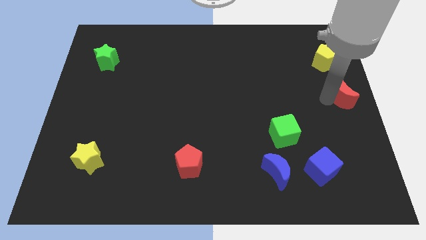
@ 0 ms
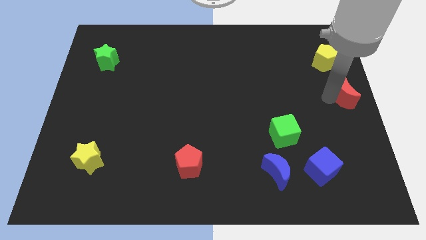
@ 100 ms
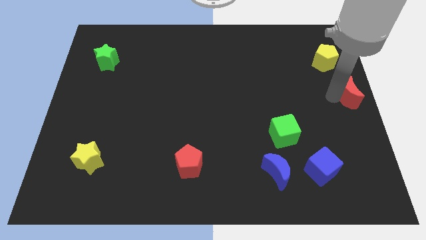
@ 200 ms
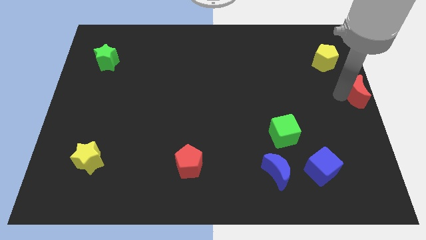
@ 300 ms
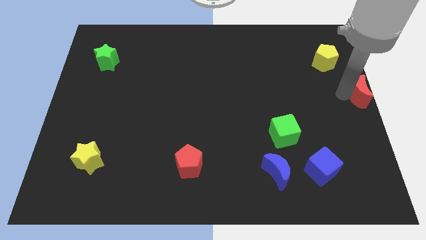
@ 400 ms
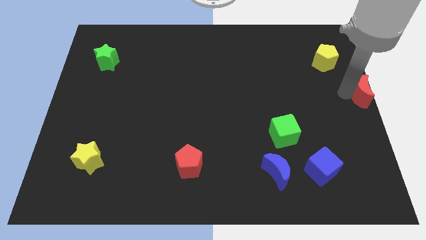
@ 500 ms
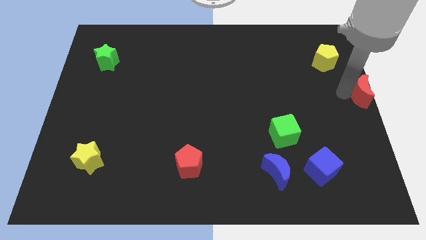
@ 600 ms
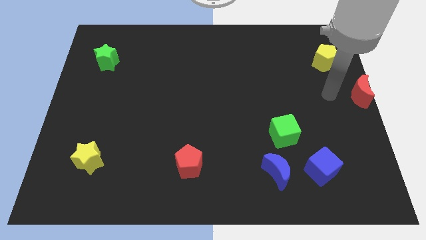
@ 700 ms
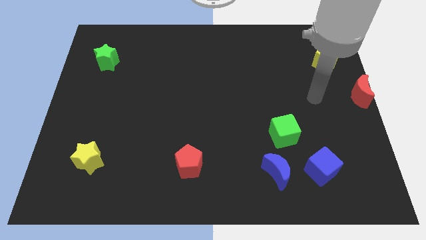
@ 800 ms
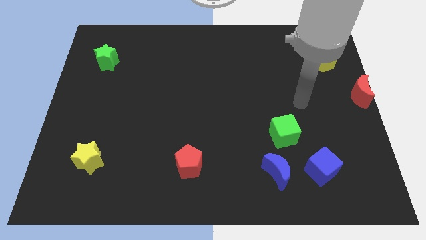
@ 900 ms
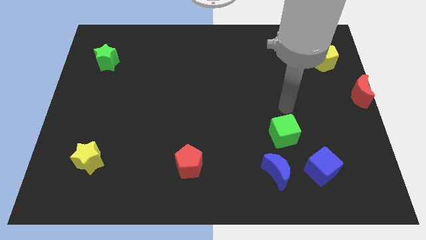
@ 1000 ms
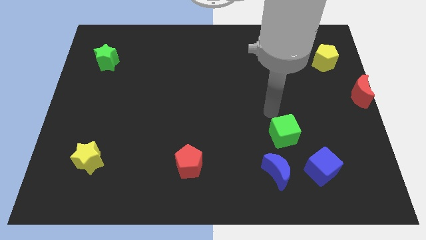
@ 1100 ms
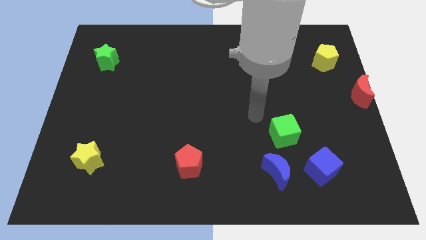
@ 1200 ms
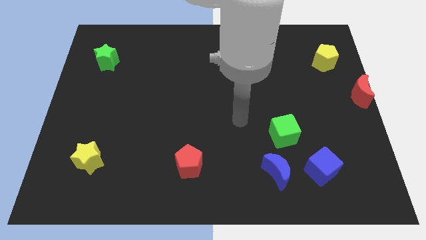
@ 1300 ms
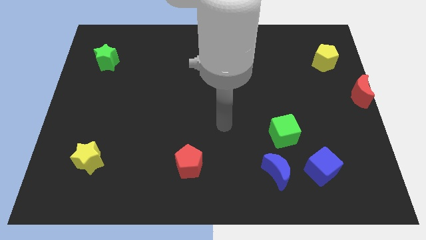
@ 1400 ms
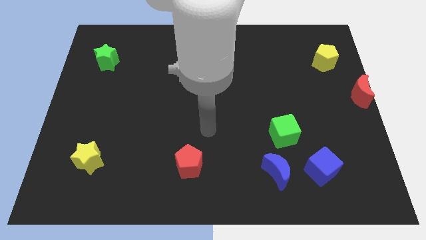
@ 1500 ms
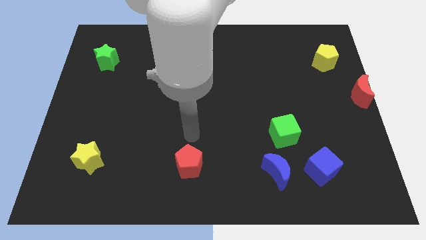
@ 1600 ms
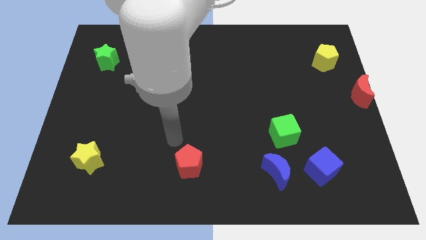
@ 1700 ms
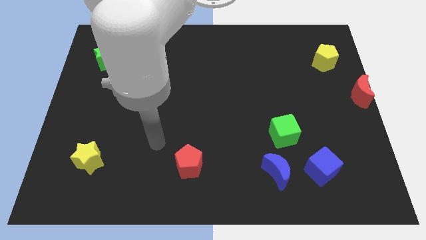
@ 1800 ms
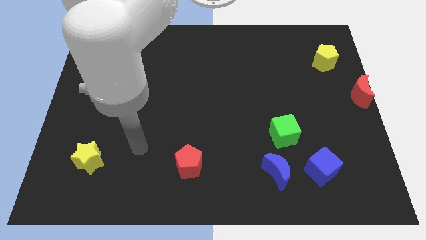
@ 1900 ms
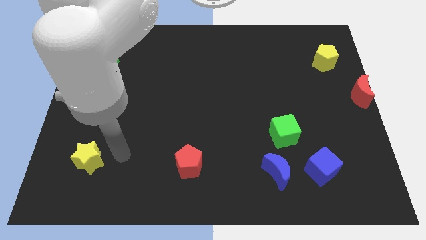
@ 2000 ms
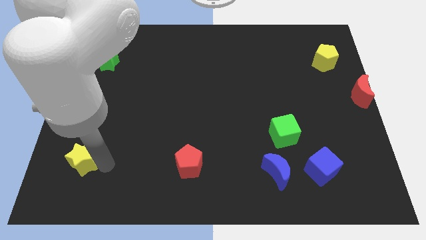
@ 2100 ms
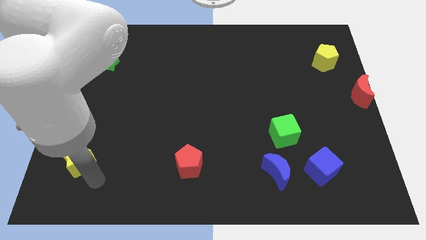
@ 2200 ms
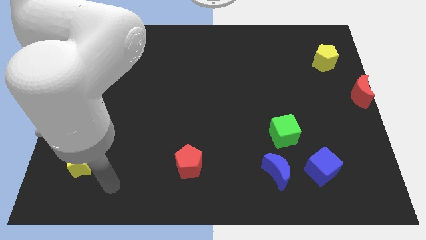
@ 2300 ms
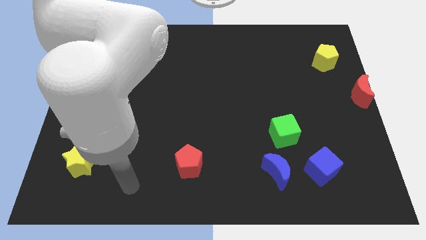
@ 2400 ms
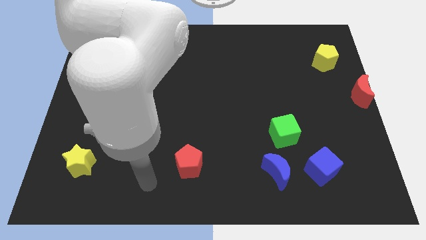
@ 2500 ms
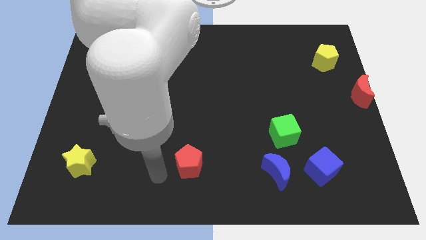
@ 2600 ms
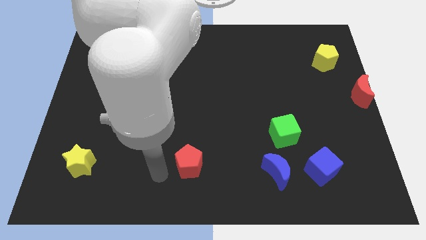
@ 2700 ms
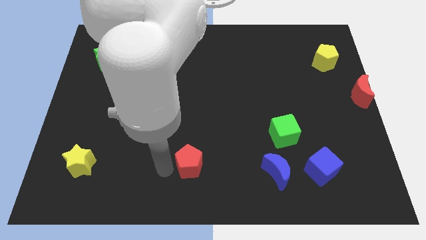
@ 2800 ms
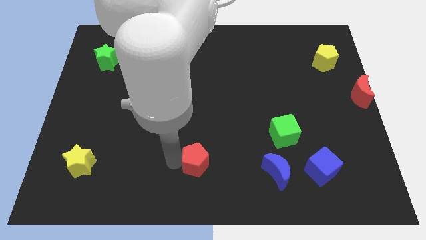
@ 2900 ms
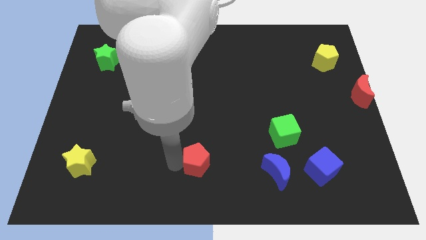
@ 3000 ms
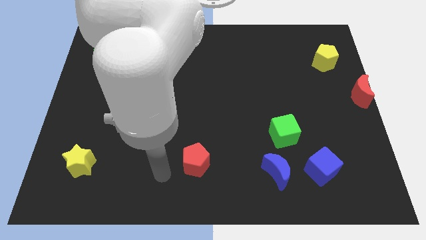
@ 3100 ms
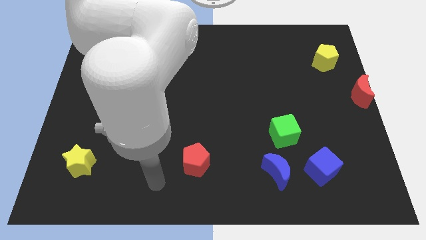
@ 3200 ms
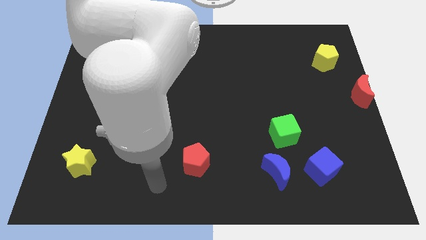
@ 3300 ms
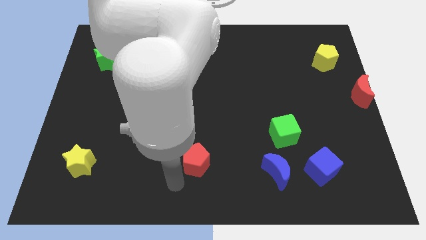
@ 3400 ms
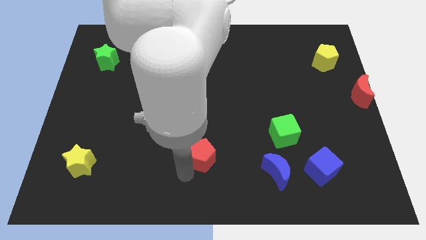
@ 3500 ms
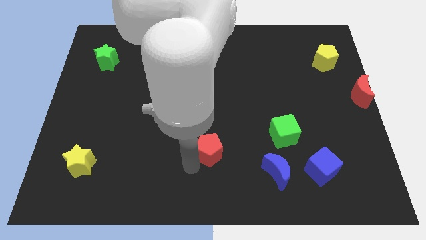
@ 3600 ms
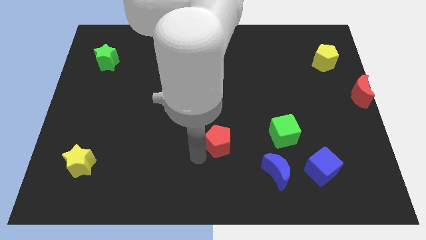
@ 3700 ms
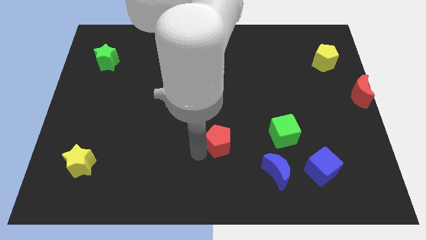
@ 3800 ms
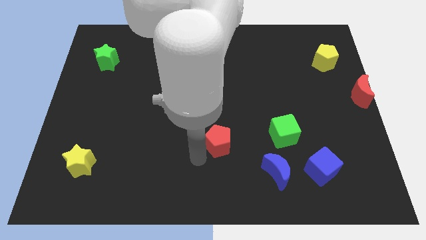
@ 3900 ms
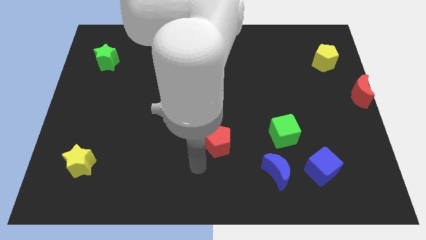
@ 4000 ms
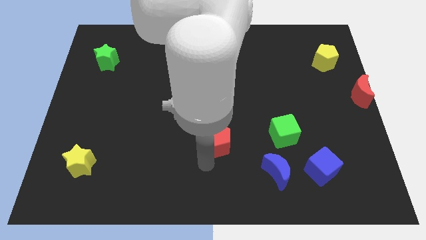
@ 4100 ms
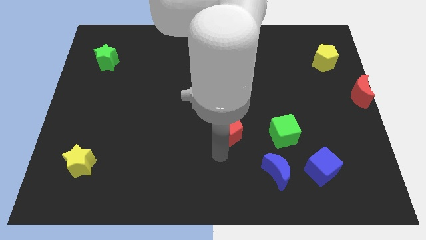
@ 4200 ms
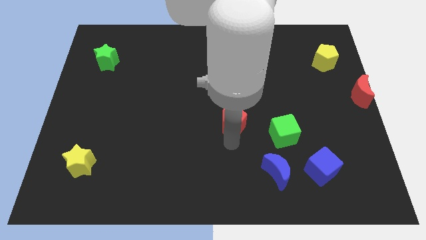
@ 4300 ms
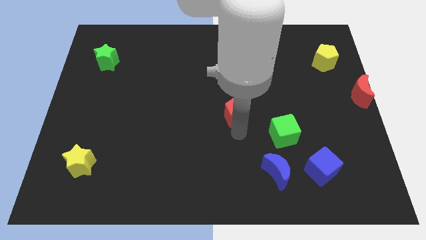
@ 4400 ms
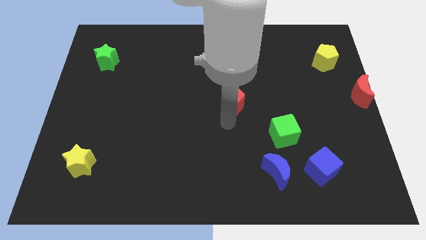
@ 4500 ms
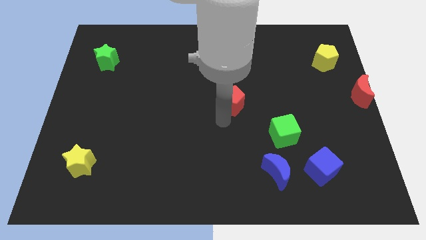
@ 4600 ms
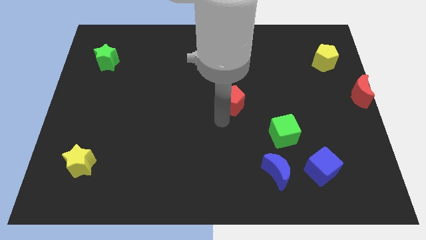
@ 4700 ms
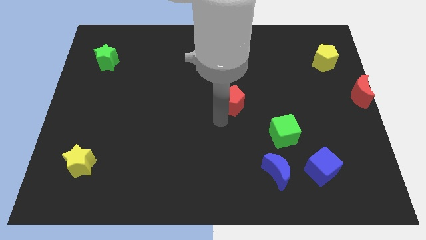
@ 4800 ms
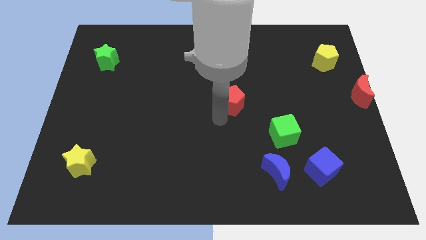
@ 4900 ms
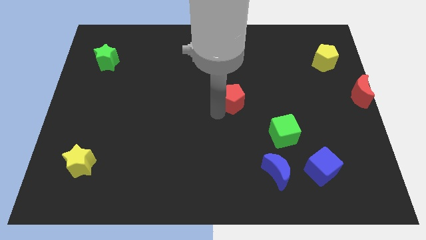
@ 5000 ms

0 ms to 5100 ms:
place the red pentagon at the center

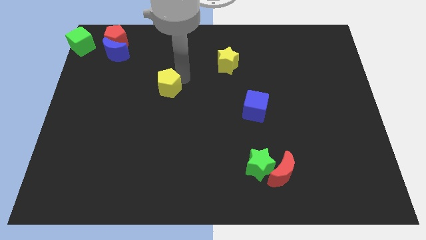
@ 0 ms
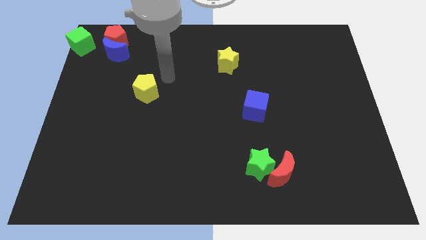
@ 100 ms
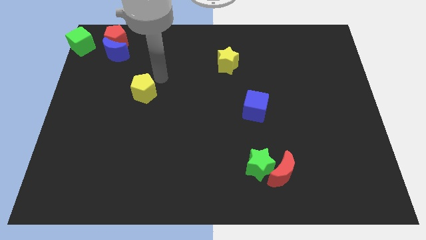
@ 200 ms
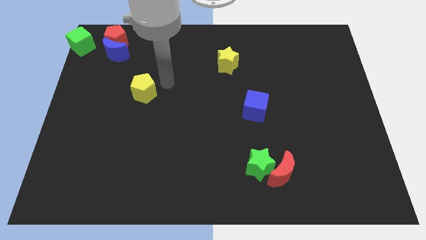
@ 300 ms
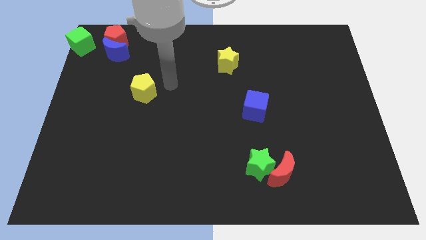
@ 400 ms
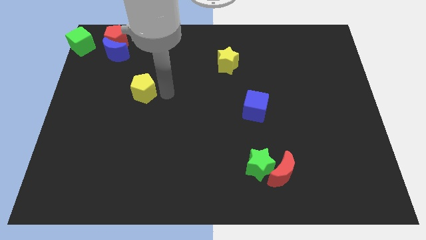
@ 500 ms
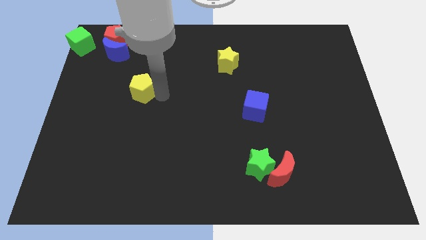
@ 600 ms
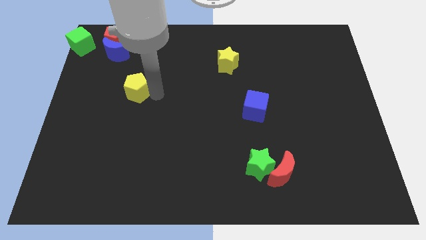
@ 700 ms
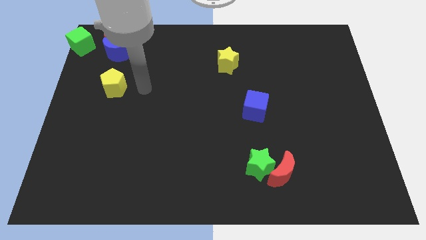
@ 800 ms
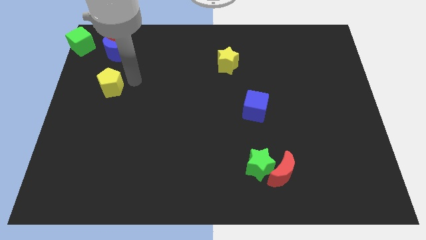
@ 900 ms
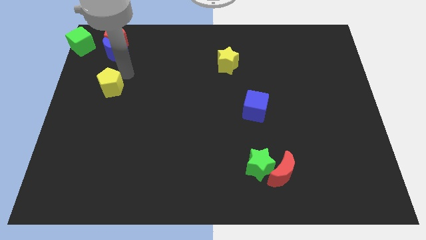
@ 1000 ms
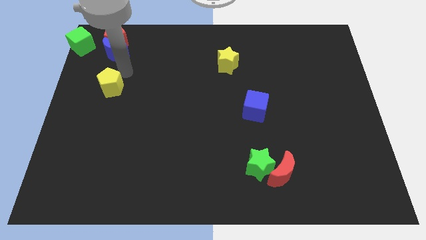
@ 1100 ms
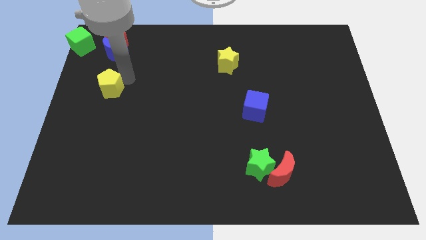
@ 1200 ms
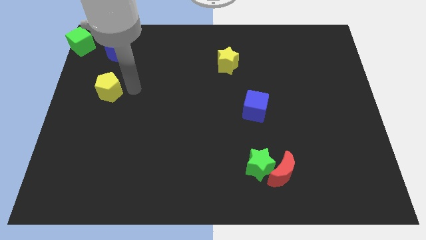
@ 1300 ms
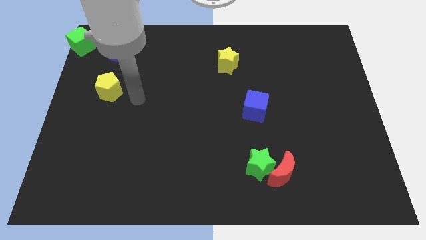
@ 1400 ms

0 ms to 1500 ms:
move the yellow pentagon slightly towards the left side

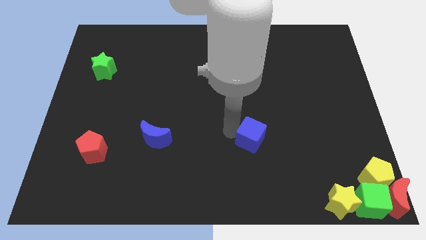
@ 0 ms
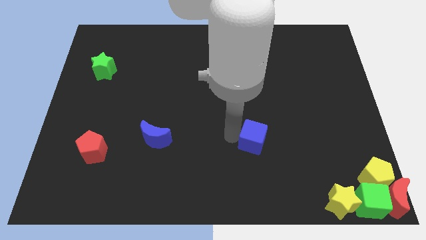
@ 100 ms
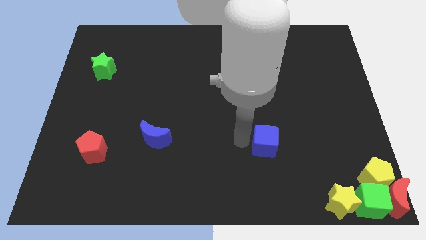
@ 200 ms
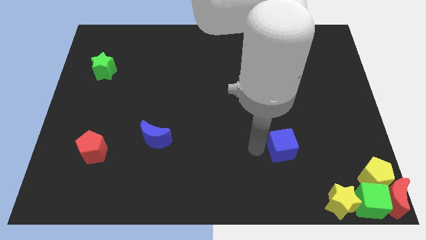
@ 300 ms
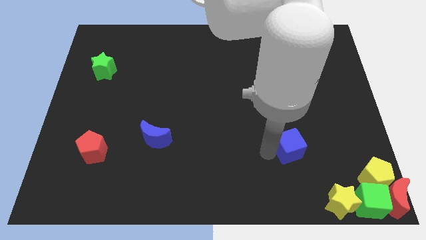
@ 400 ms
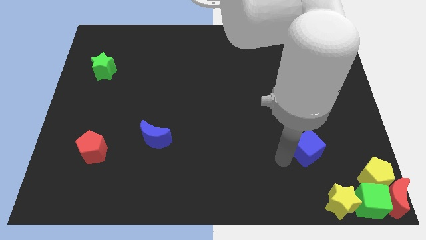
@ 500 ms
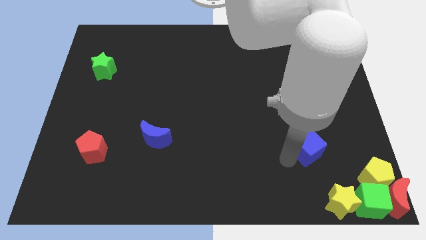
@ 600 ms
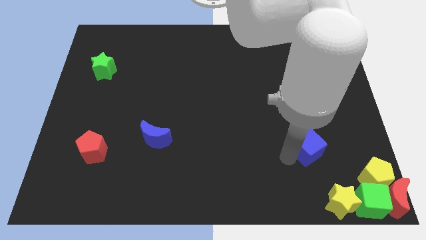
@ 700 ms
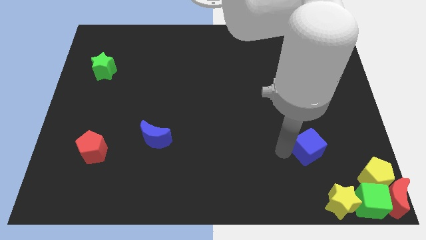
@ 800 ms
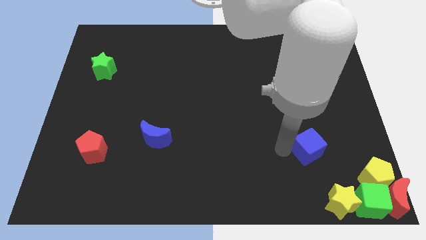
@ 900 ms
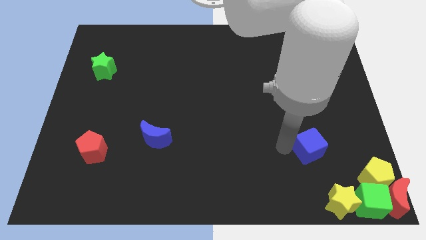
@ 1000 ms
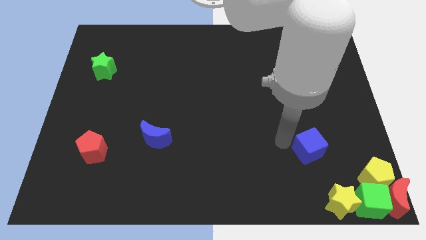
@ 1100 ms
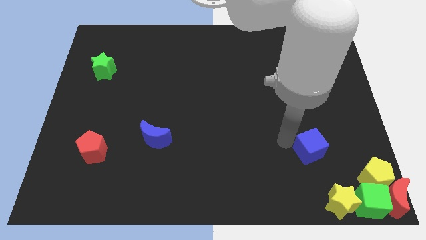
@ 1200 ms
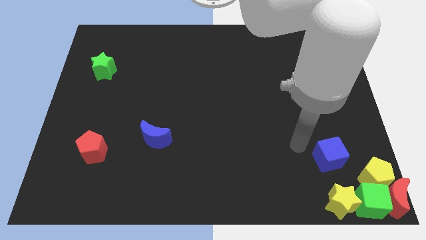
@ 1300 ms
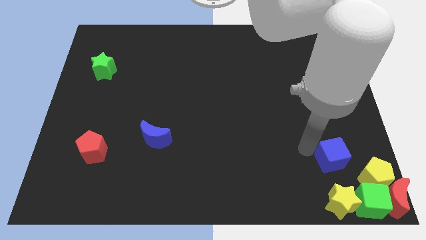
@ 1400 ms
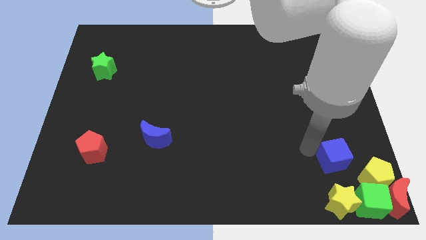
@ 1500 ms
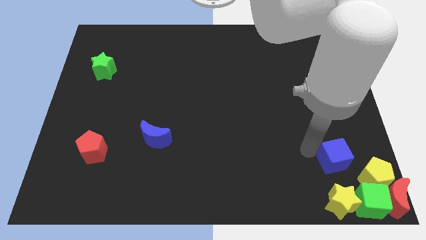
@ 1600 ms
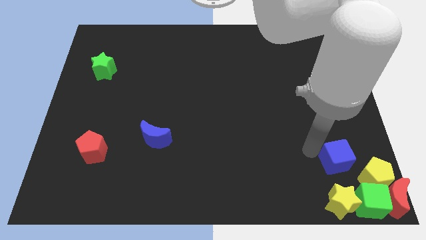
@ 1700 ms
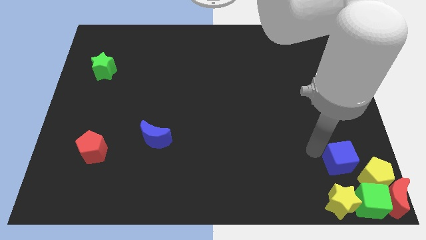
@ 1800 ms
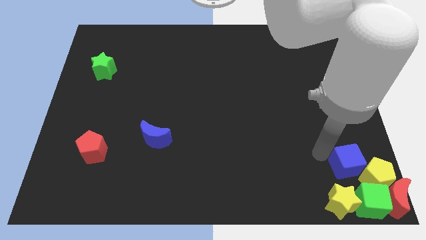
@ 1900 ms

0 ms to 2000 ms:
place the blue cube to the top side of the the yellow star

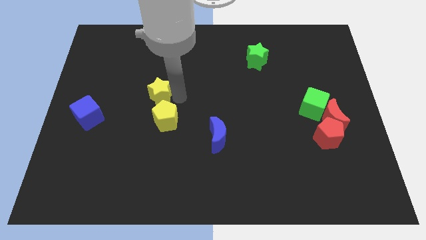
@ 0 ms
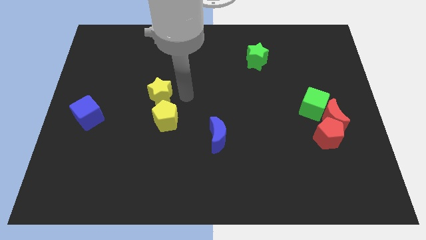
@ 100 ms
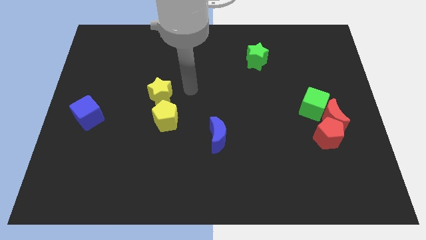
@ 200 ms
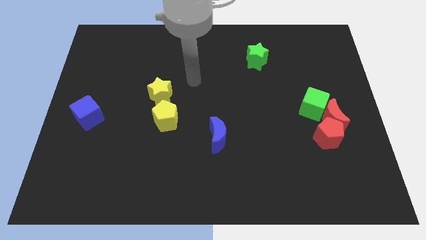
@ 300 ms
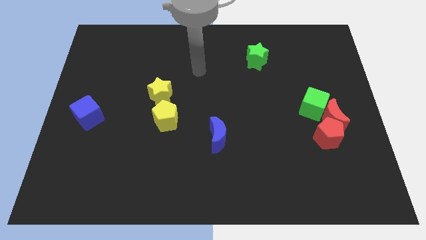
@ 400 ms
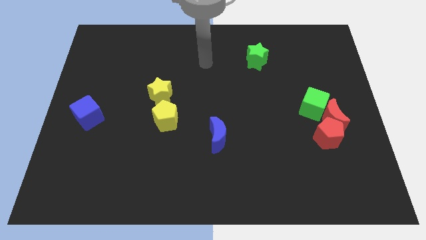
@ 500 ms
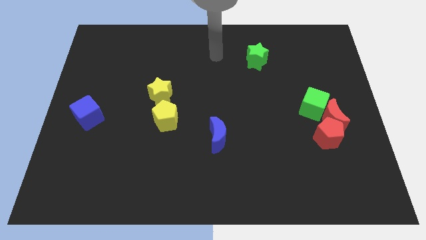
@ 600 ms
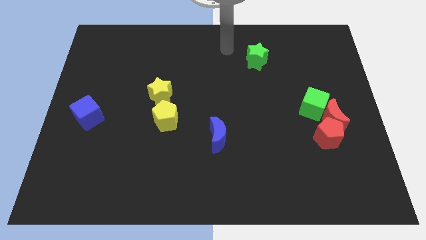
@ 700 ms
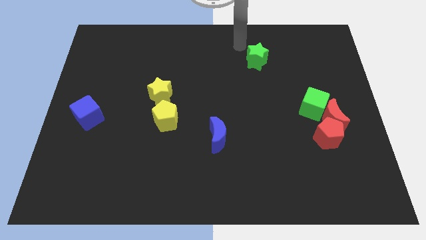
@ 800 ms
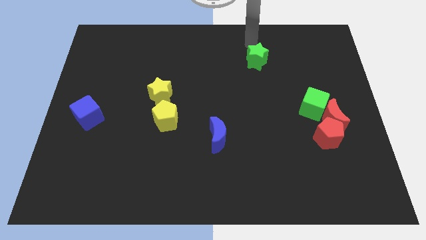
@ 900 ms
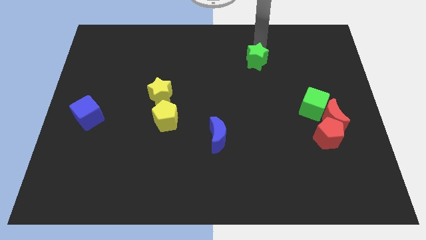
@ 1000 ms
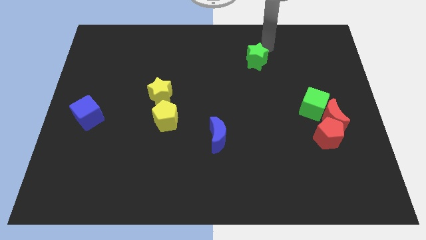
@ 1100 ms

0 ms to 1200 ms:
move your arm away from the yellow star